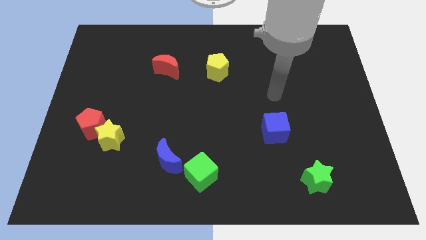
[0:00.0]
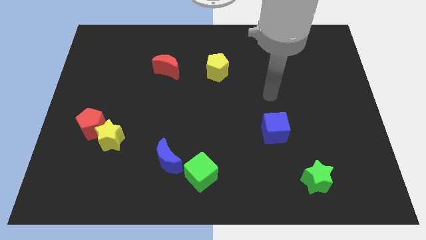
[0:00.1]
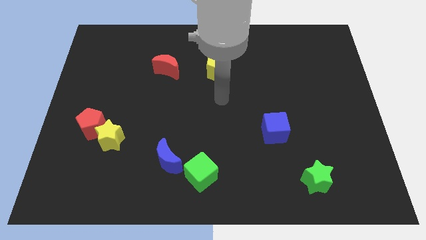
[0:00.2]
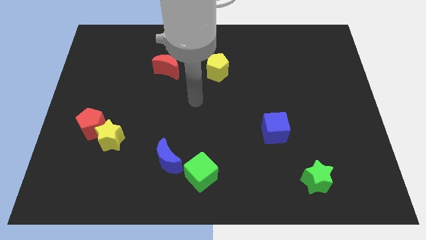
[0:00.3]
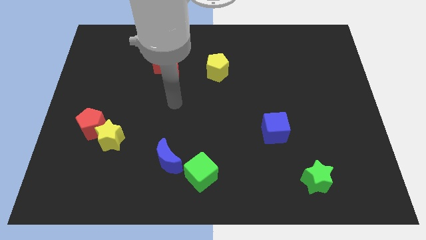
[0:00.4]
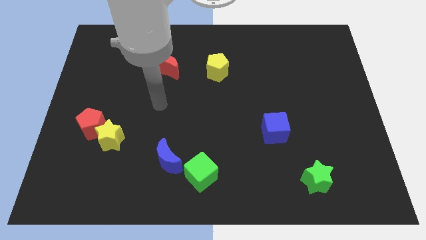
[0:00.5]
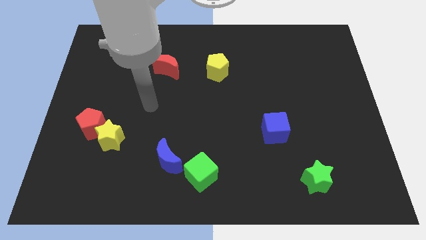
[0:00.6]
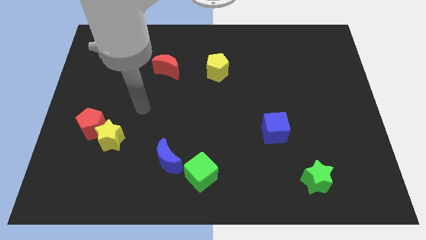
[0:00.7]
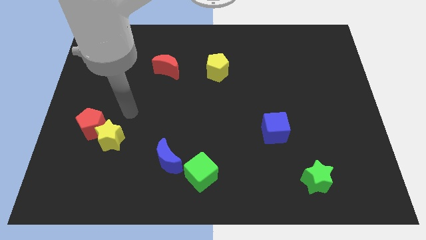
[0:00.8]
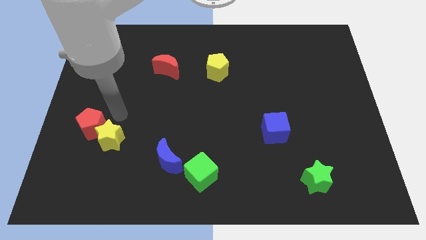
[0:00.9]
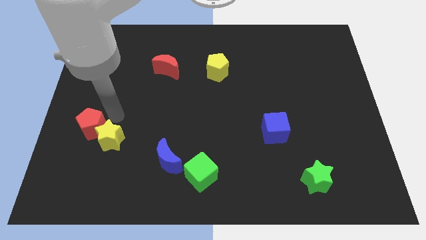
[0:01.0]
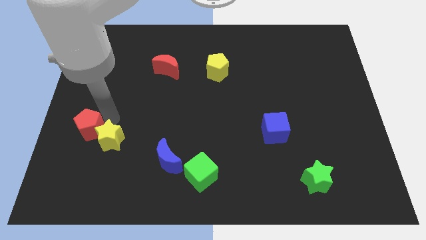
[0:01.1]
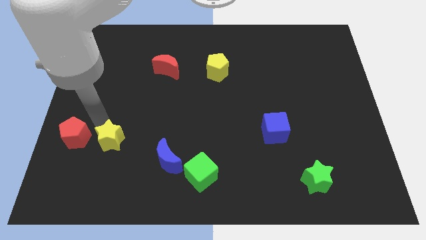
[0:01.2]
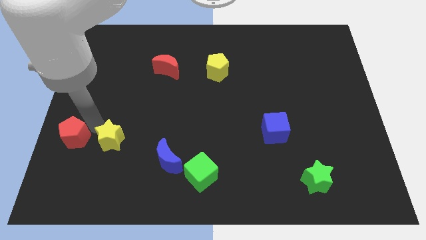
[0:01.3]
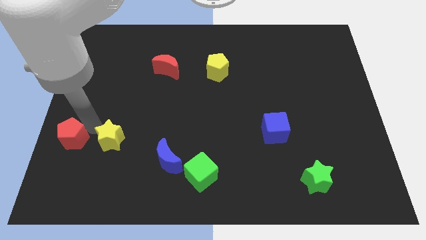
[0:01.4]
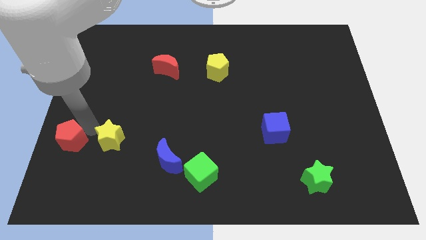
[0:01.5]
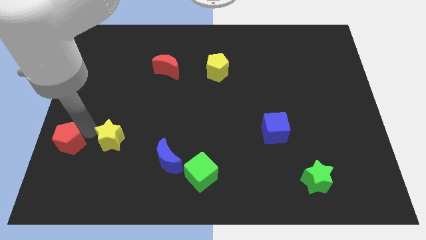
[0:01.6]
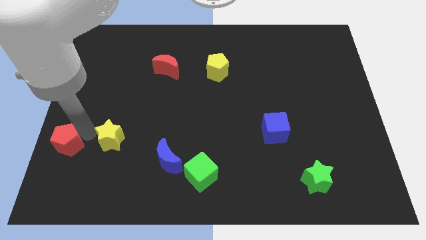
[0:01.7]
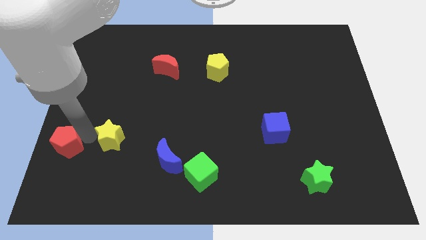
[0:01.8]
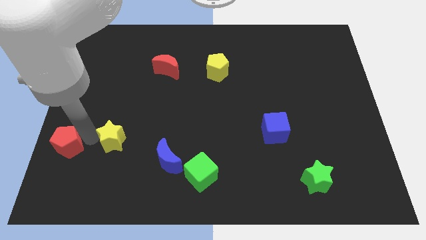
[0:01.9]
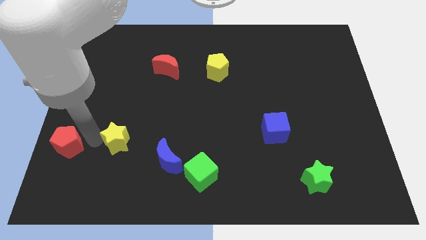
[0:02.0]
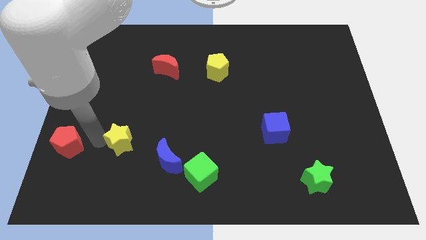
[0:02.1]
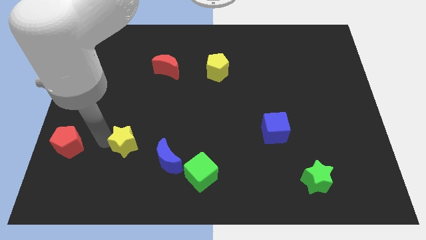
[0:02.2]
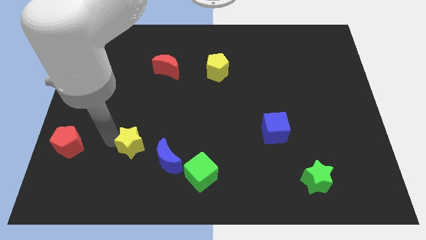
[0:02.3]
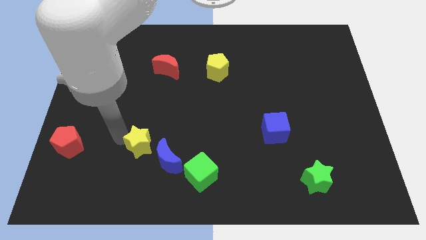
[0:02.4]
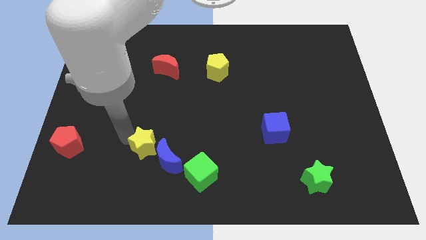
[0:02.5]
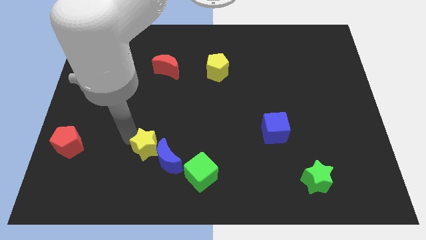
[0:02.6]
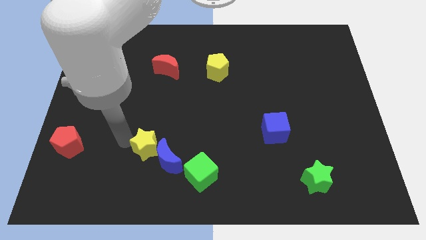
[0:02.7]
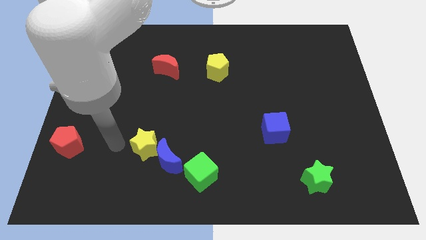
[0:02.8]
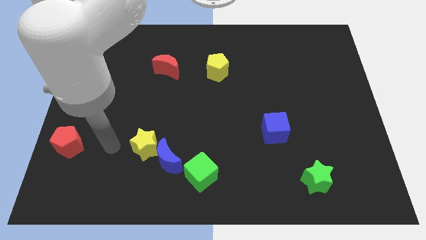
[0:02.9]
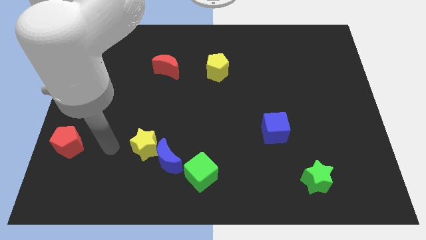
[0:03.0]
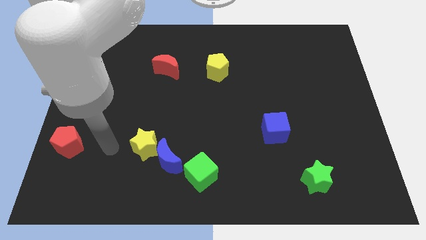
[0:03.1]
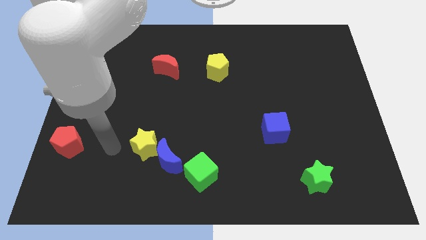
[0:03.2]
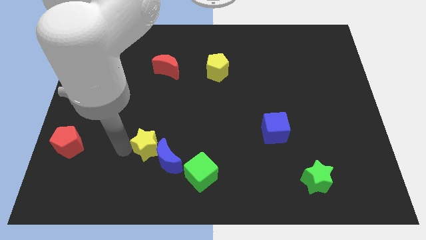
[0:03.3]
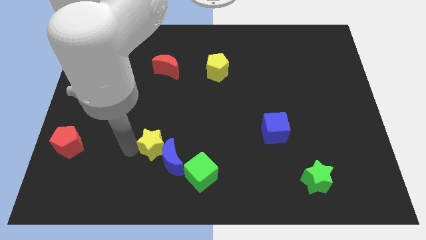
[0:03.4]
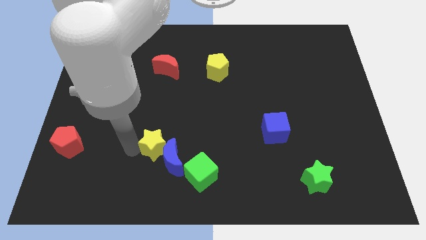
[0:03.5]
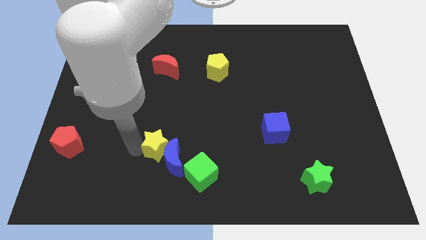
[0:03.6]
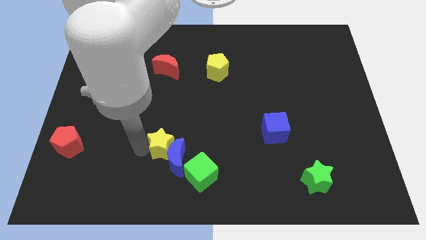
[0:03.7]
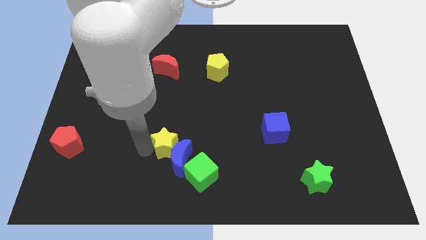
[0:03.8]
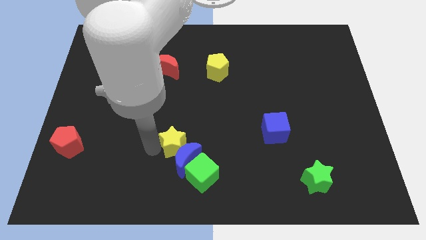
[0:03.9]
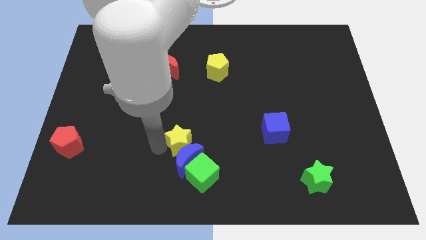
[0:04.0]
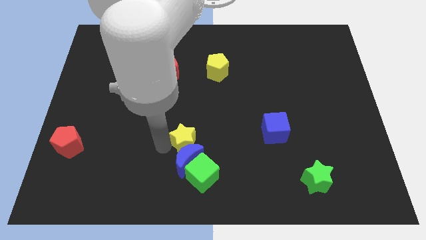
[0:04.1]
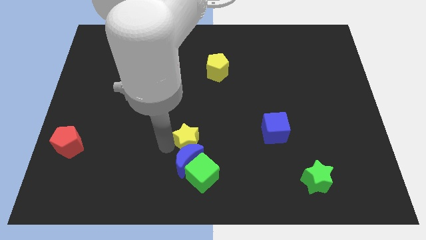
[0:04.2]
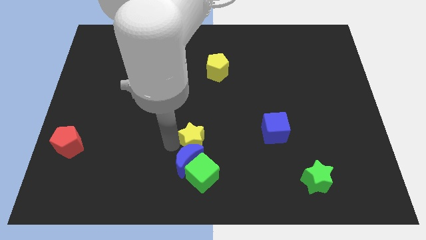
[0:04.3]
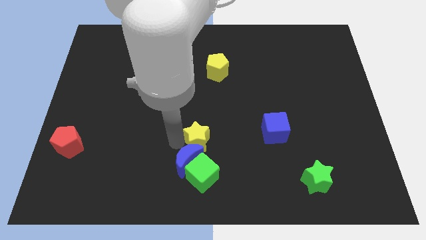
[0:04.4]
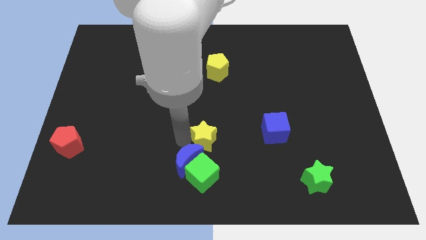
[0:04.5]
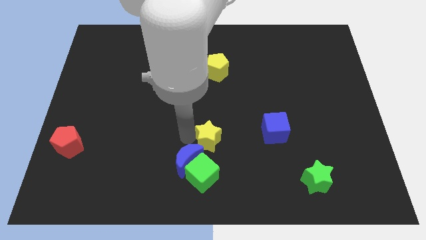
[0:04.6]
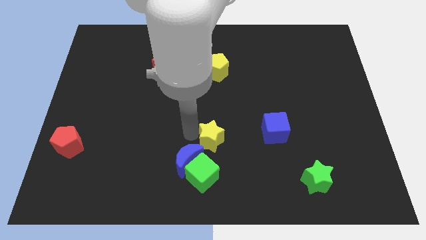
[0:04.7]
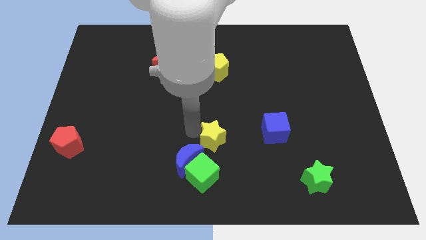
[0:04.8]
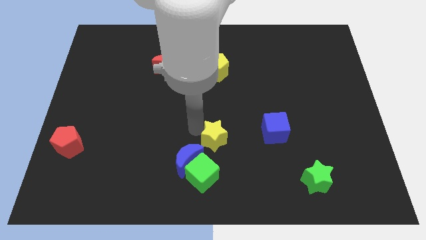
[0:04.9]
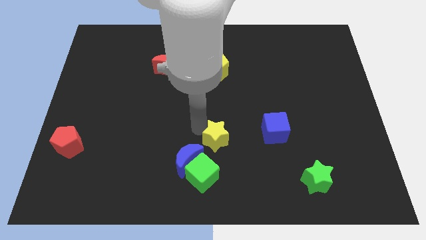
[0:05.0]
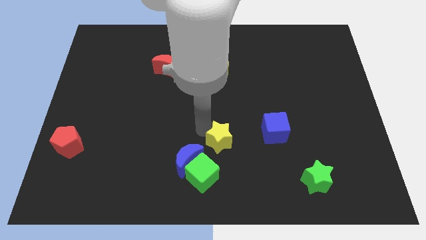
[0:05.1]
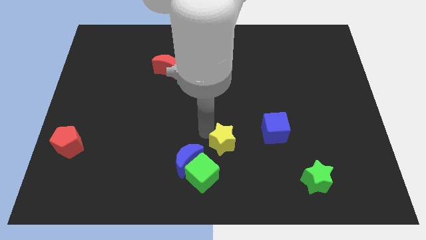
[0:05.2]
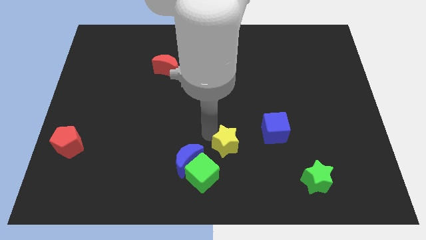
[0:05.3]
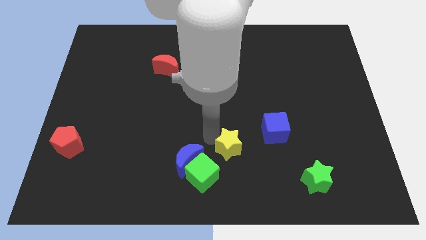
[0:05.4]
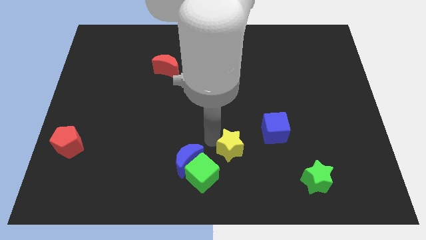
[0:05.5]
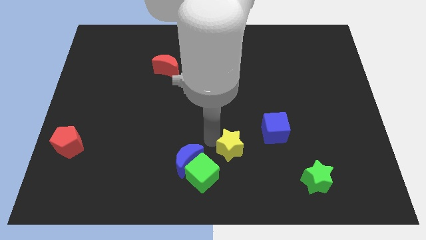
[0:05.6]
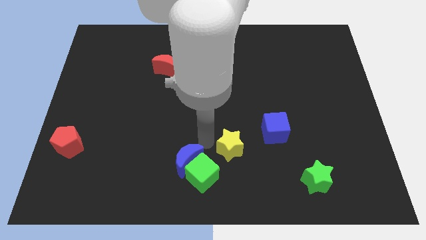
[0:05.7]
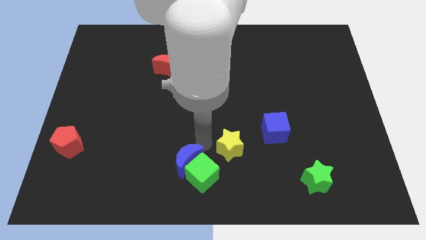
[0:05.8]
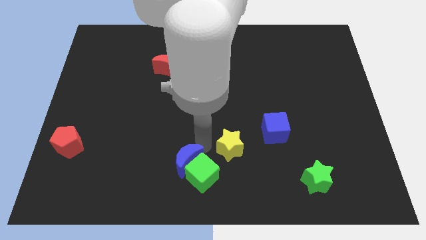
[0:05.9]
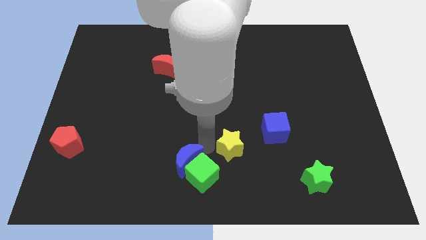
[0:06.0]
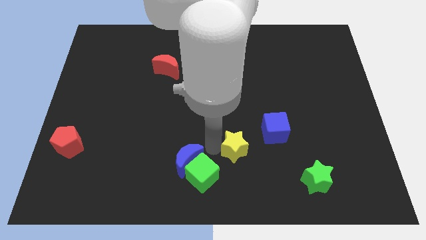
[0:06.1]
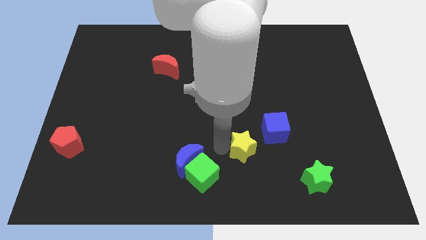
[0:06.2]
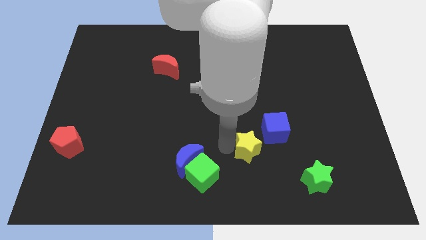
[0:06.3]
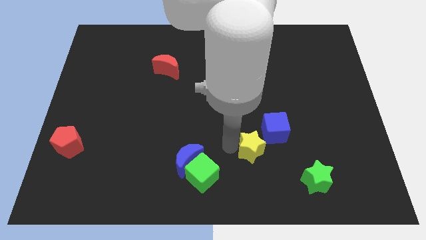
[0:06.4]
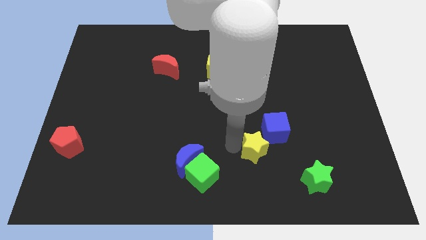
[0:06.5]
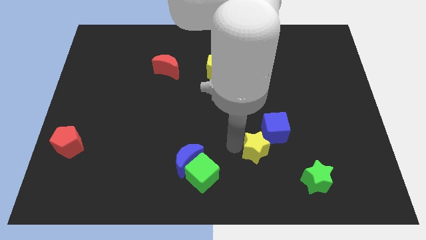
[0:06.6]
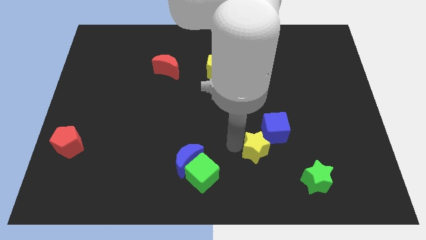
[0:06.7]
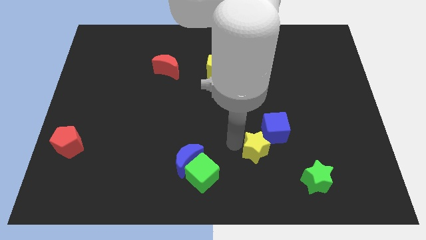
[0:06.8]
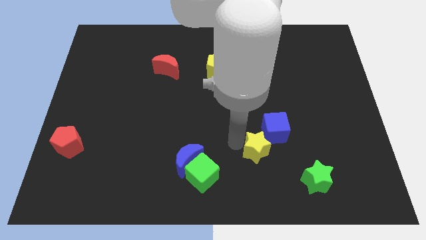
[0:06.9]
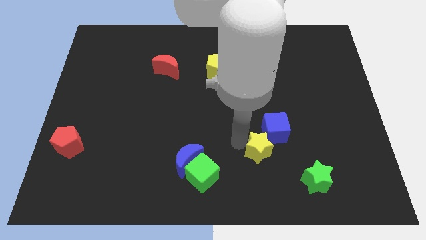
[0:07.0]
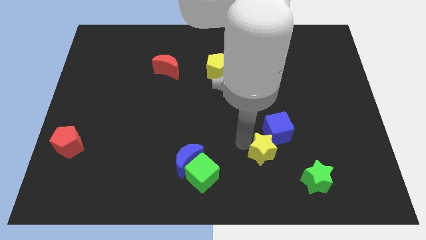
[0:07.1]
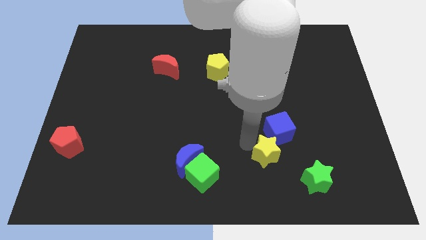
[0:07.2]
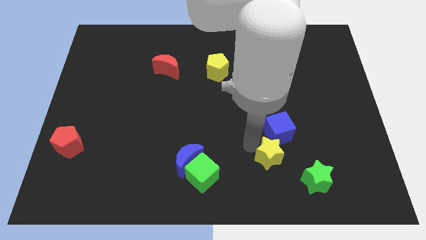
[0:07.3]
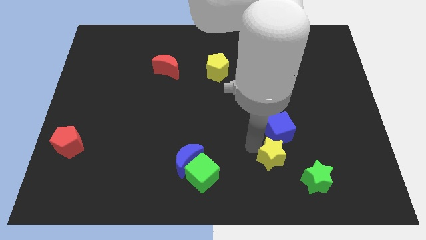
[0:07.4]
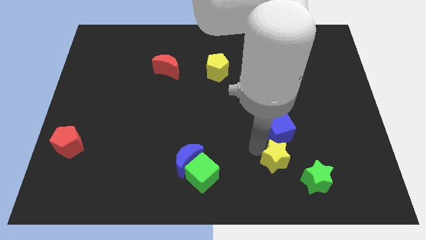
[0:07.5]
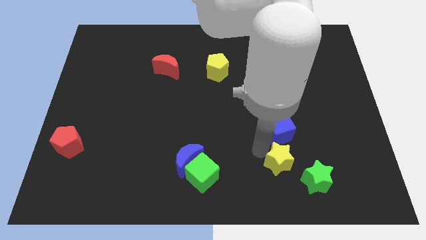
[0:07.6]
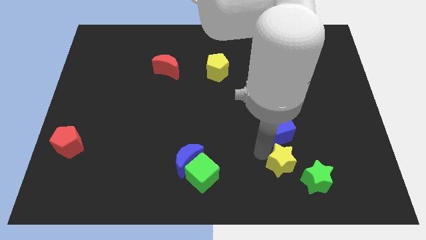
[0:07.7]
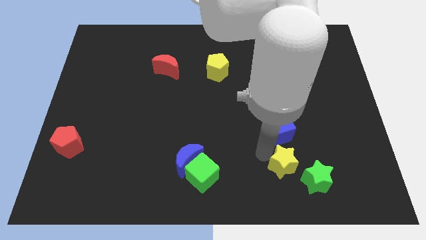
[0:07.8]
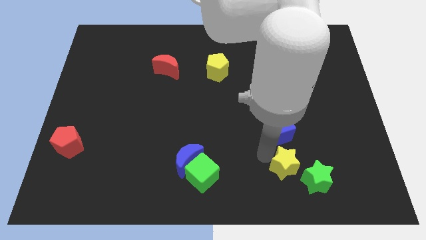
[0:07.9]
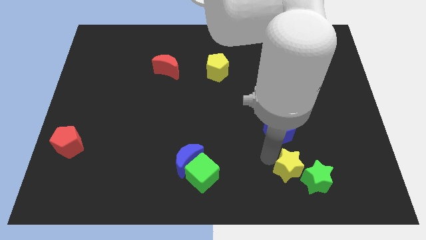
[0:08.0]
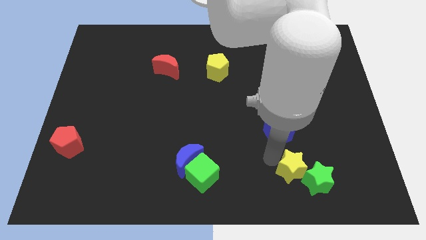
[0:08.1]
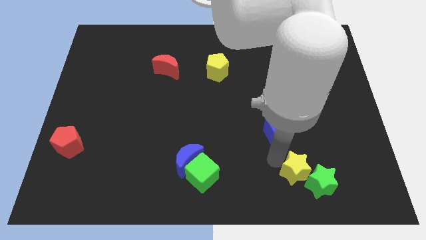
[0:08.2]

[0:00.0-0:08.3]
slide the yellow star close to the green star

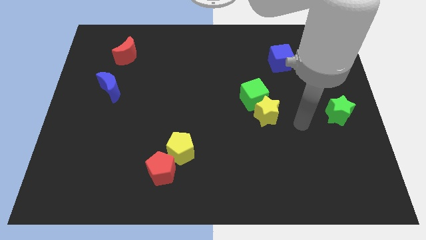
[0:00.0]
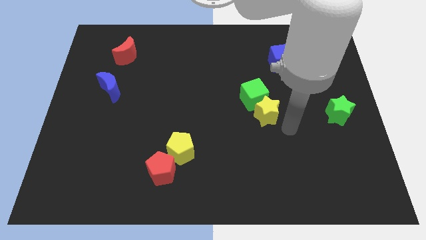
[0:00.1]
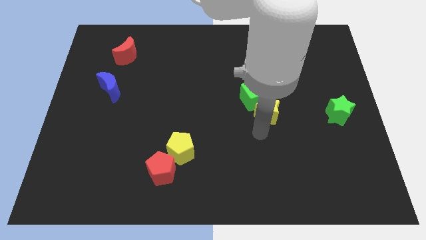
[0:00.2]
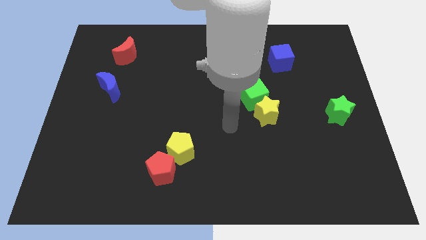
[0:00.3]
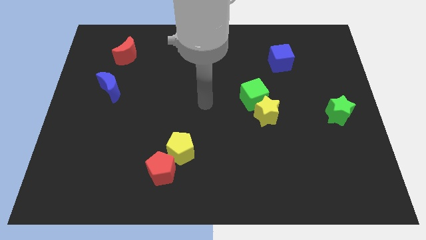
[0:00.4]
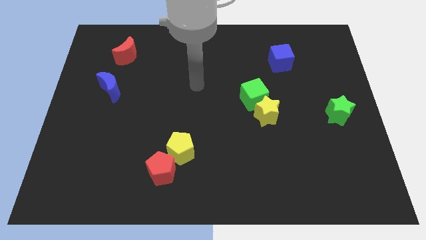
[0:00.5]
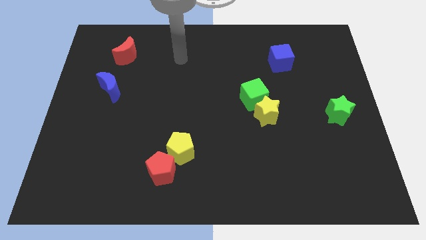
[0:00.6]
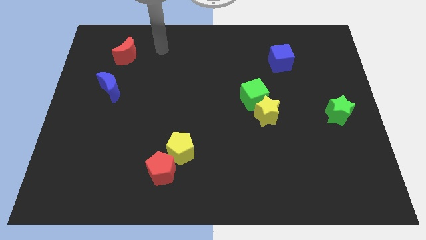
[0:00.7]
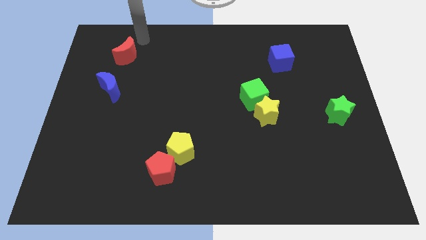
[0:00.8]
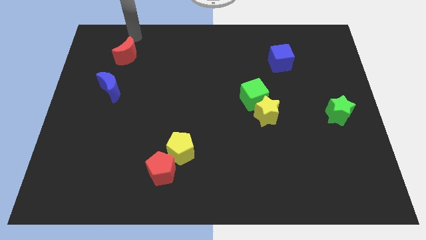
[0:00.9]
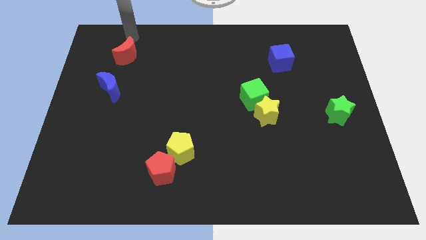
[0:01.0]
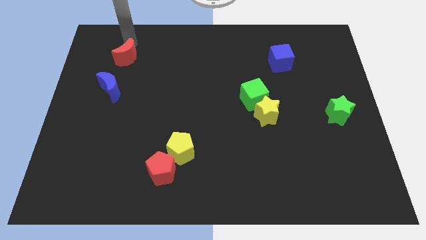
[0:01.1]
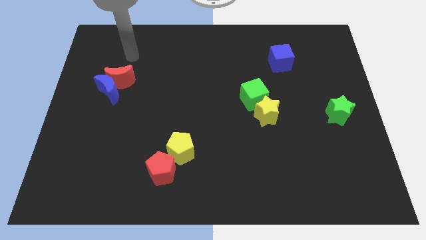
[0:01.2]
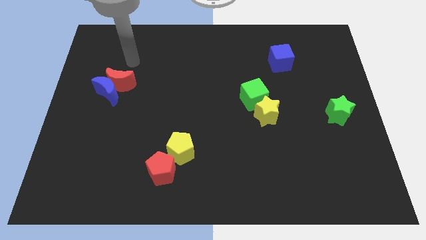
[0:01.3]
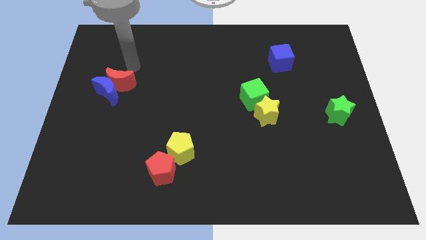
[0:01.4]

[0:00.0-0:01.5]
move the red moon towards the blue moon
